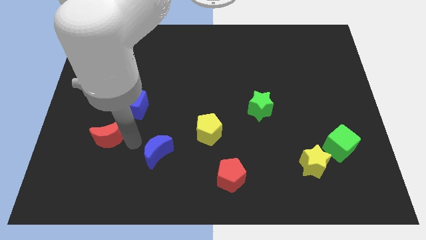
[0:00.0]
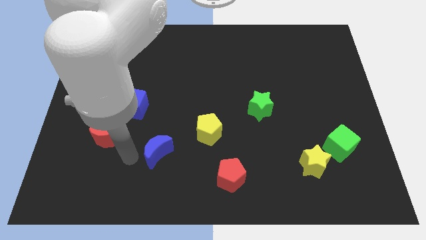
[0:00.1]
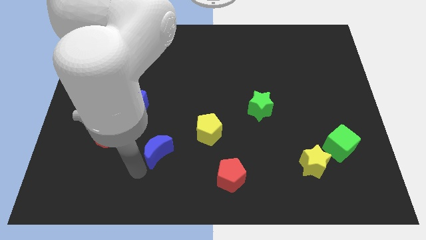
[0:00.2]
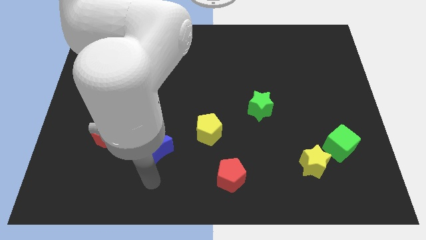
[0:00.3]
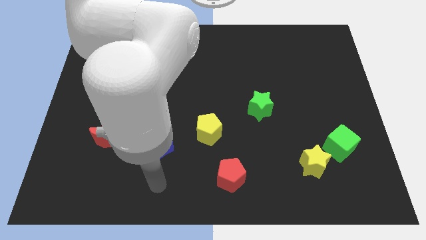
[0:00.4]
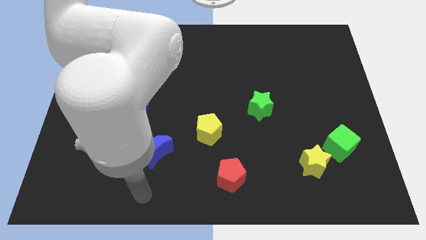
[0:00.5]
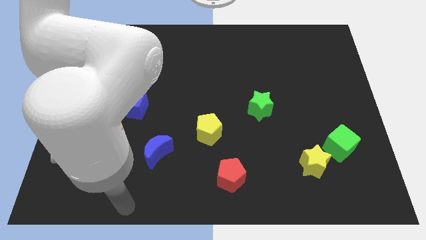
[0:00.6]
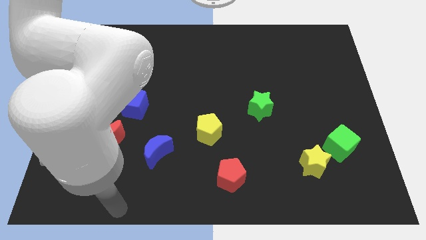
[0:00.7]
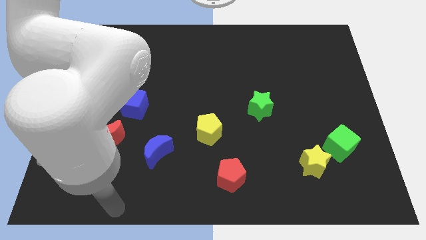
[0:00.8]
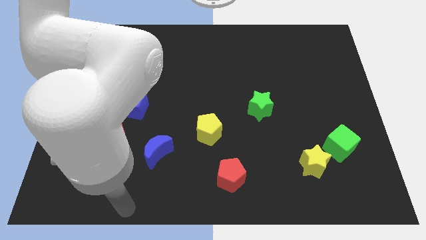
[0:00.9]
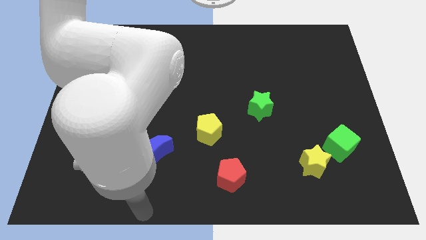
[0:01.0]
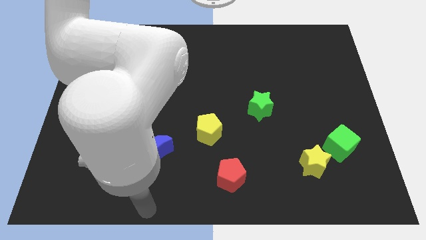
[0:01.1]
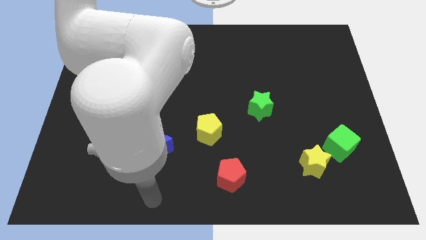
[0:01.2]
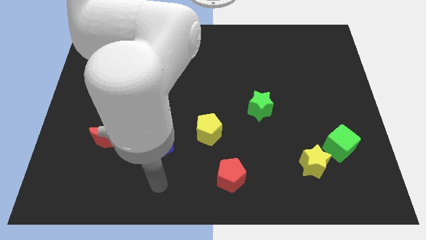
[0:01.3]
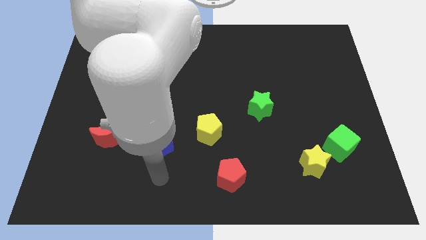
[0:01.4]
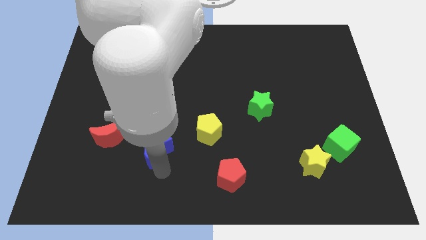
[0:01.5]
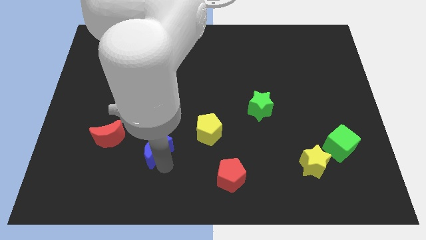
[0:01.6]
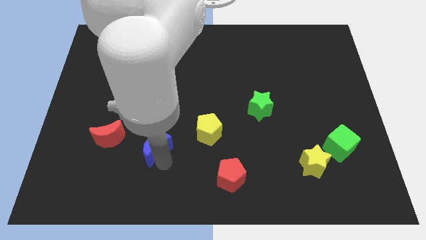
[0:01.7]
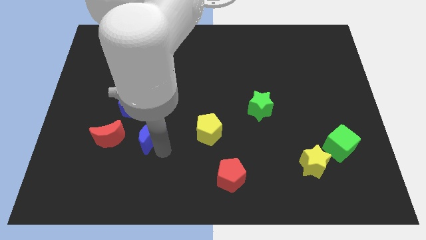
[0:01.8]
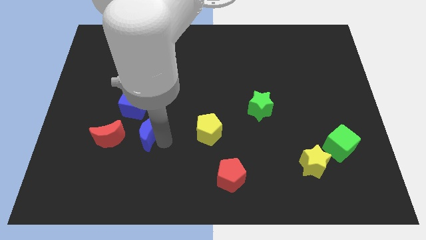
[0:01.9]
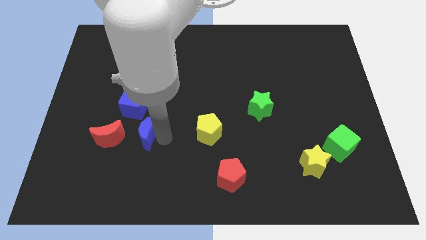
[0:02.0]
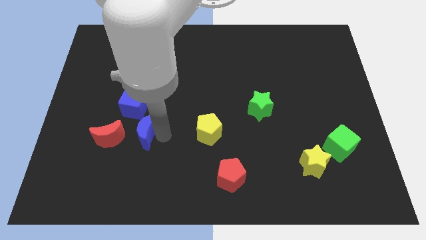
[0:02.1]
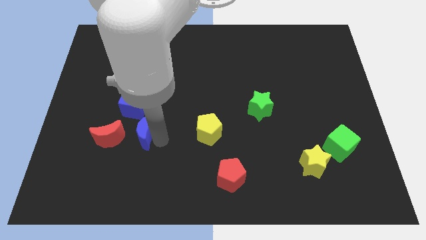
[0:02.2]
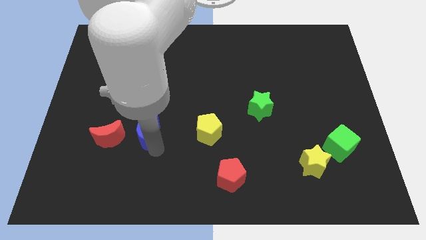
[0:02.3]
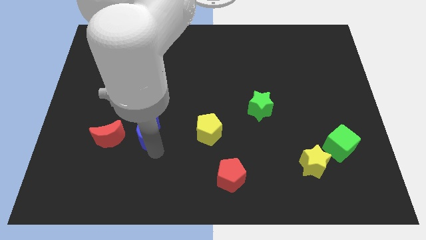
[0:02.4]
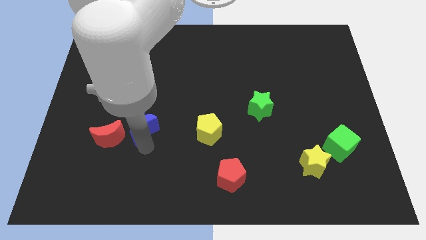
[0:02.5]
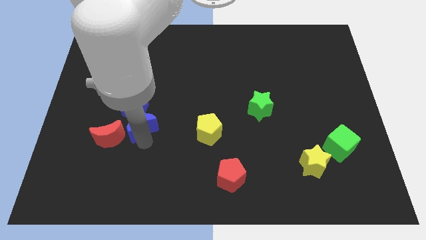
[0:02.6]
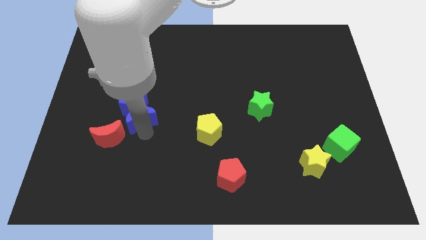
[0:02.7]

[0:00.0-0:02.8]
slide blue moon into blue cube

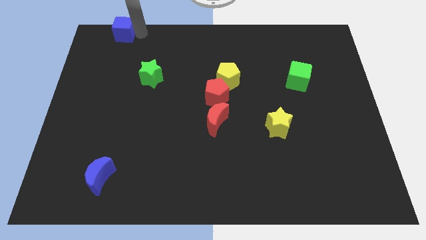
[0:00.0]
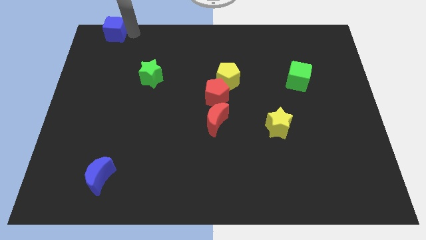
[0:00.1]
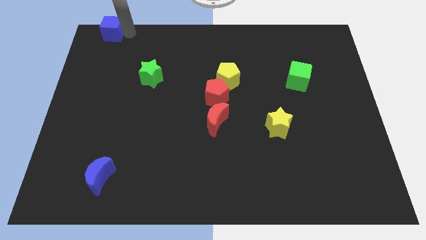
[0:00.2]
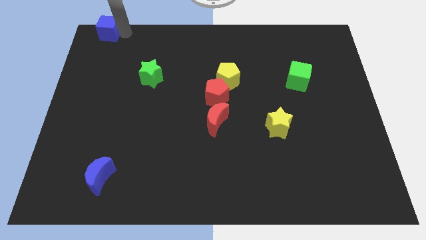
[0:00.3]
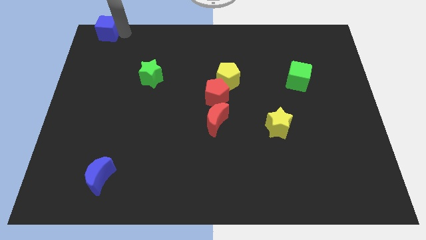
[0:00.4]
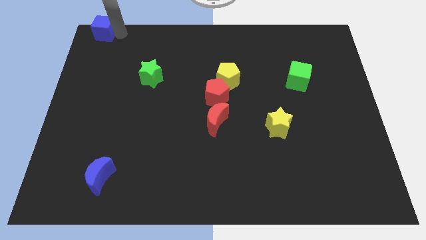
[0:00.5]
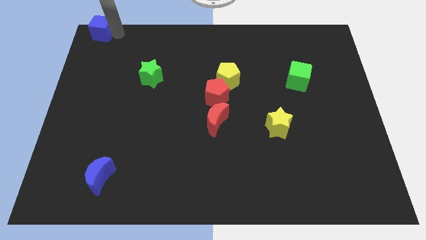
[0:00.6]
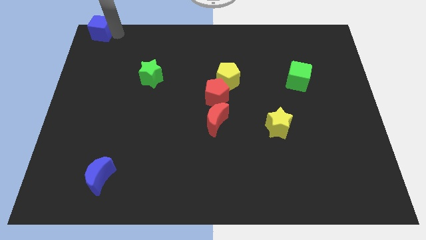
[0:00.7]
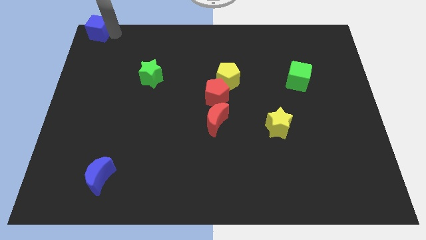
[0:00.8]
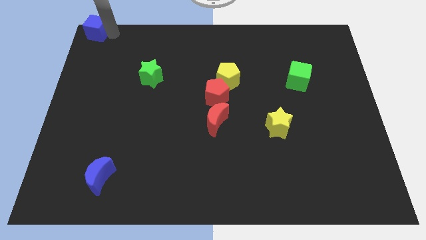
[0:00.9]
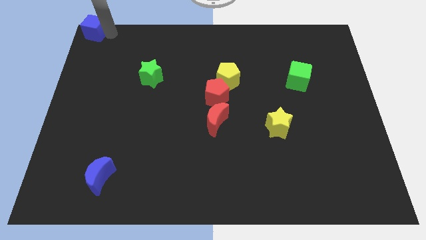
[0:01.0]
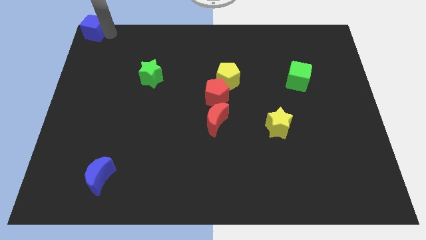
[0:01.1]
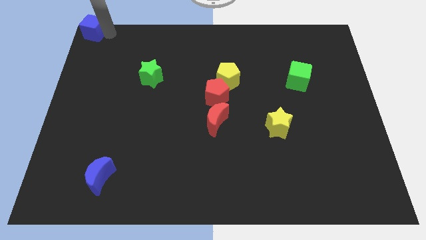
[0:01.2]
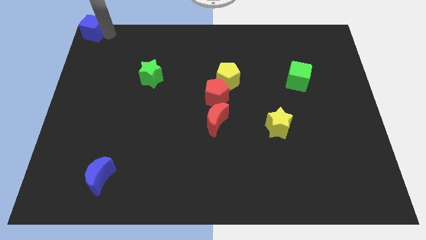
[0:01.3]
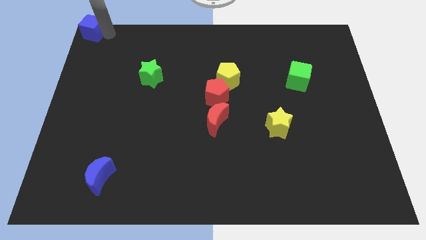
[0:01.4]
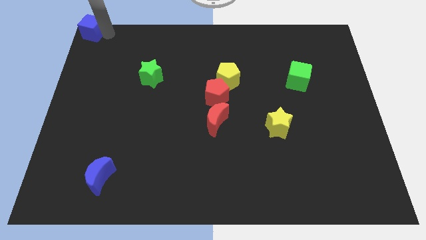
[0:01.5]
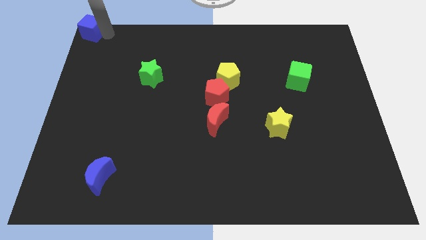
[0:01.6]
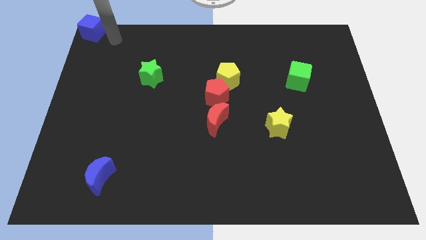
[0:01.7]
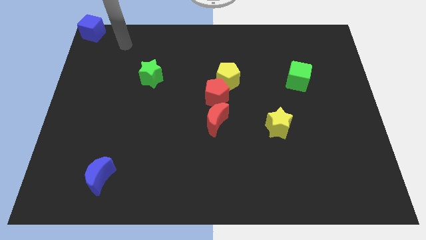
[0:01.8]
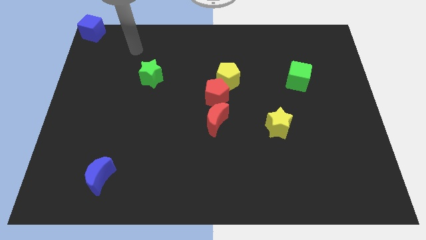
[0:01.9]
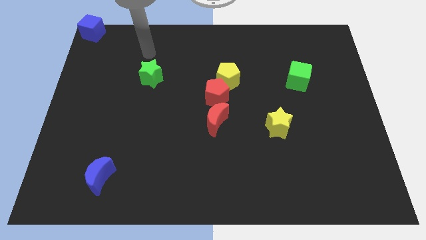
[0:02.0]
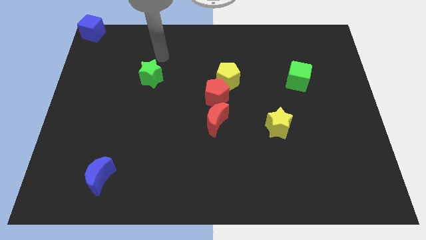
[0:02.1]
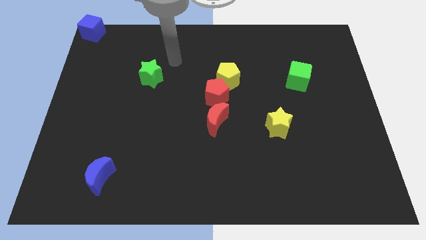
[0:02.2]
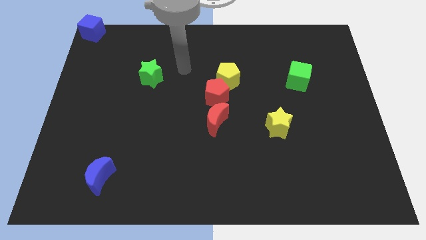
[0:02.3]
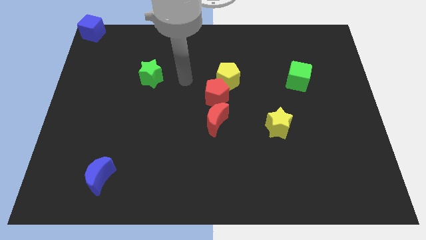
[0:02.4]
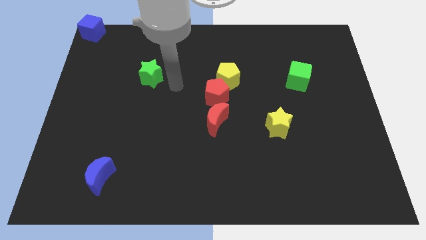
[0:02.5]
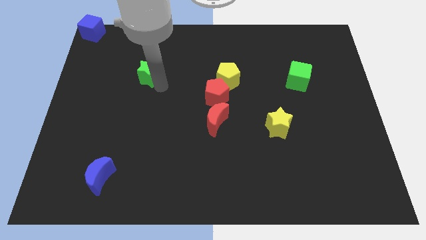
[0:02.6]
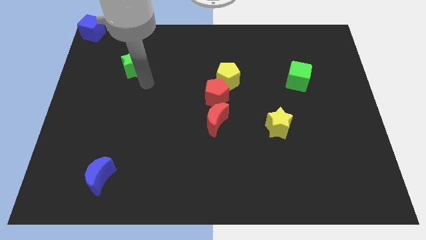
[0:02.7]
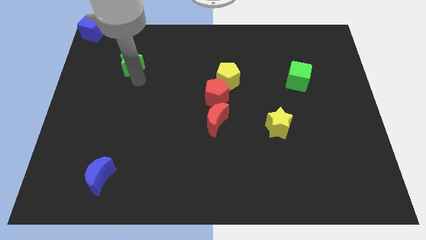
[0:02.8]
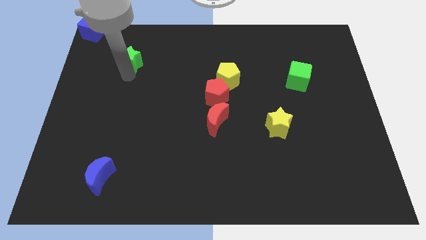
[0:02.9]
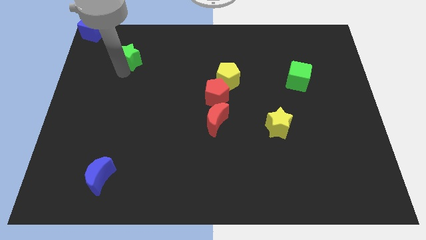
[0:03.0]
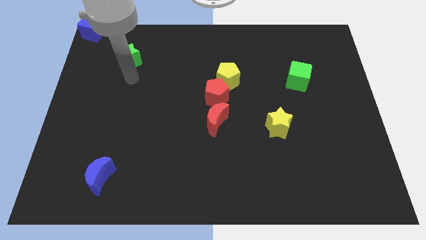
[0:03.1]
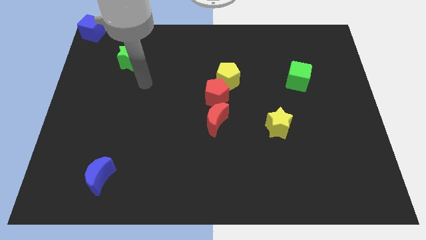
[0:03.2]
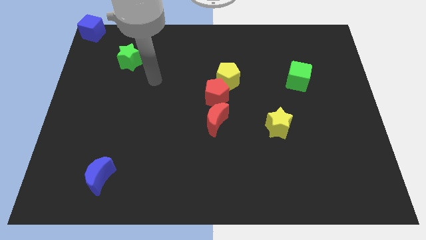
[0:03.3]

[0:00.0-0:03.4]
move green star to the bottom right of blue cube

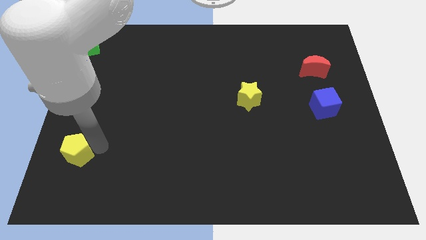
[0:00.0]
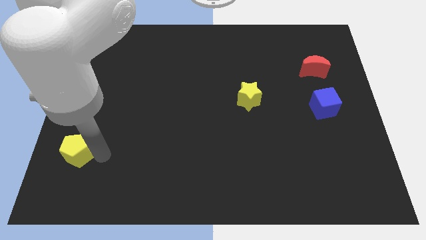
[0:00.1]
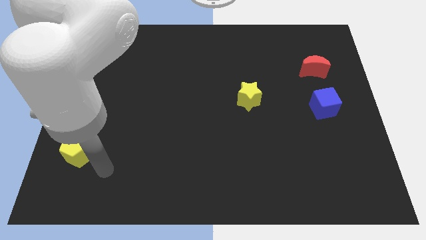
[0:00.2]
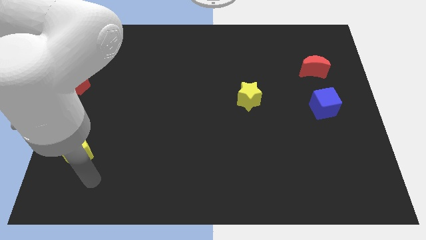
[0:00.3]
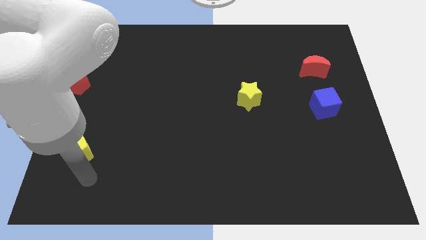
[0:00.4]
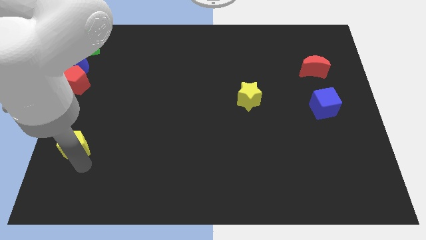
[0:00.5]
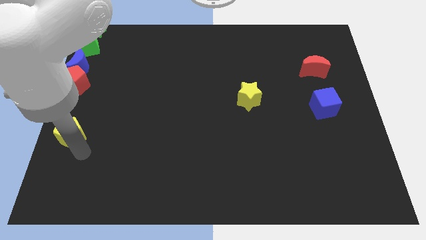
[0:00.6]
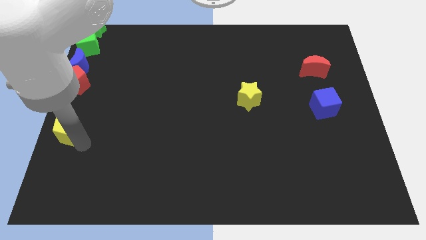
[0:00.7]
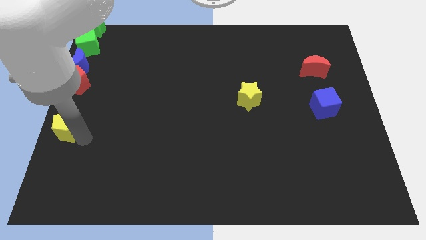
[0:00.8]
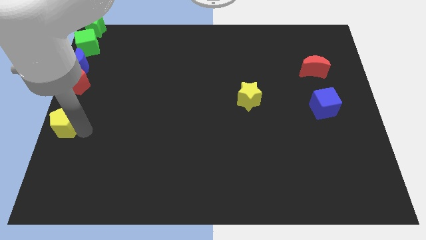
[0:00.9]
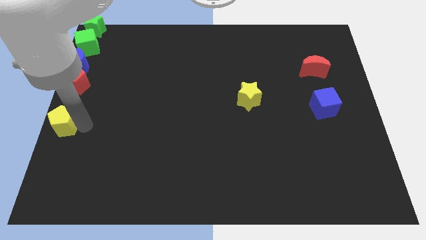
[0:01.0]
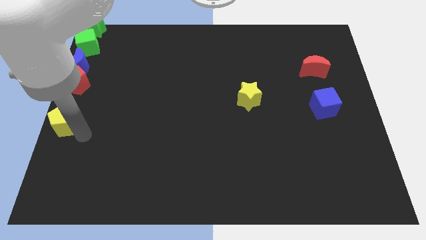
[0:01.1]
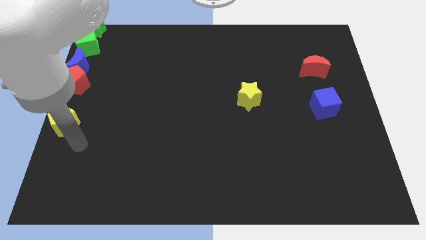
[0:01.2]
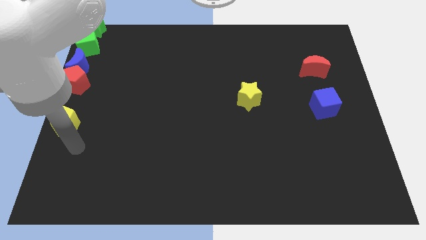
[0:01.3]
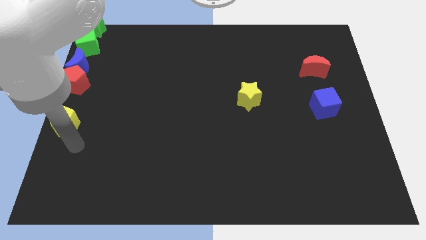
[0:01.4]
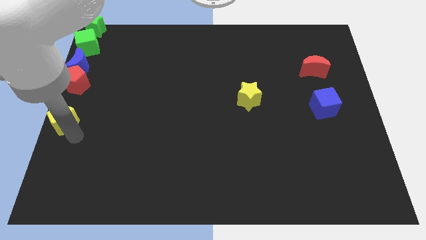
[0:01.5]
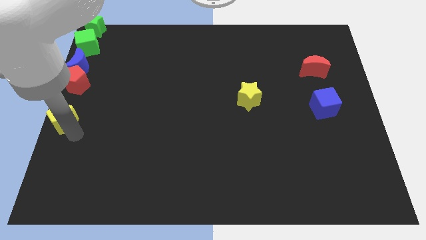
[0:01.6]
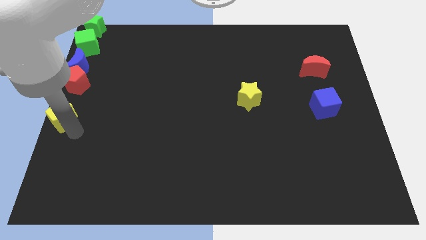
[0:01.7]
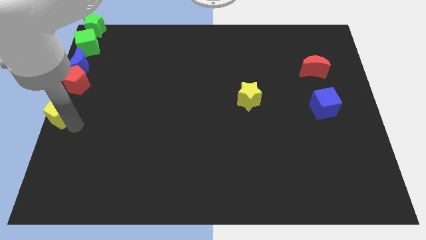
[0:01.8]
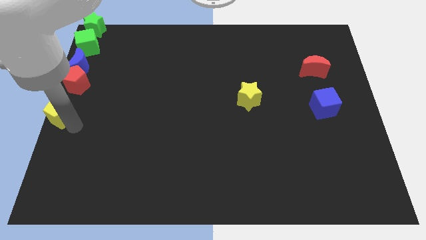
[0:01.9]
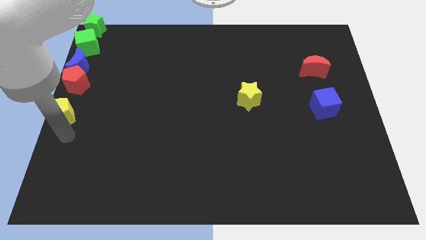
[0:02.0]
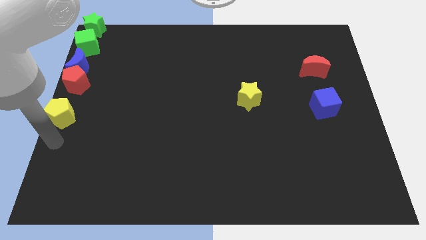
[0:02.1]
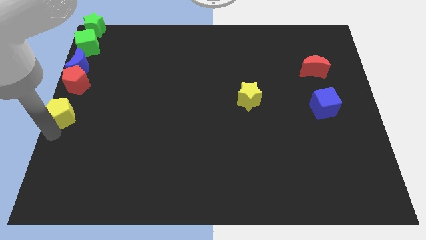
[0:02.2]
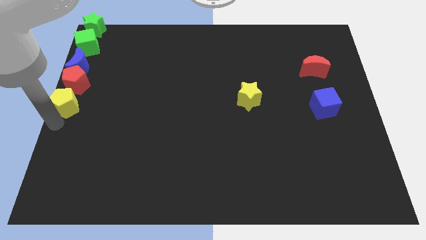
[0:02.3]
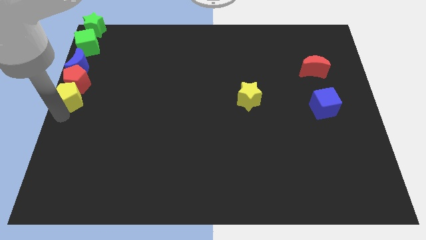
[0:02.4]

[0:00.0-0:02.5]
push the yellow pentagon into red pentagon
